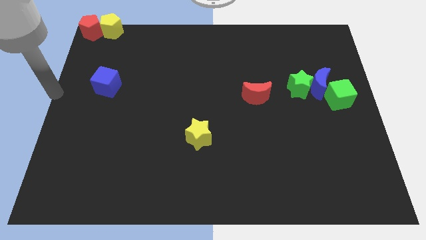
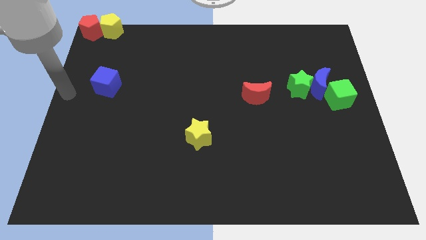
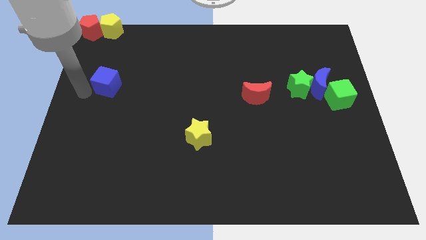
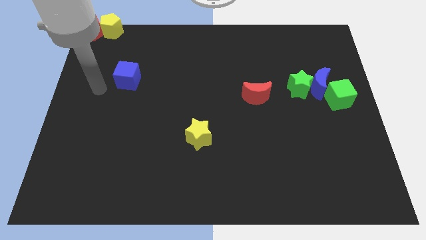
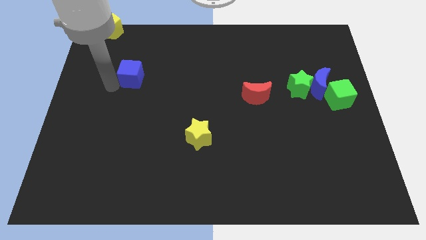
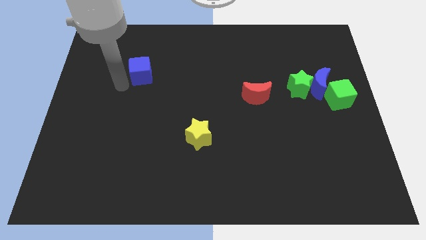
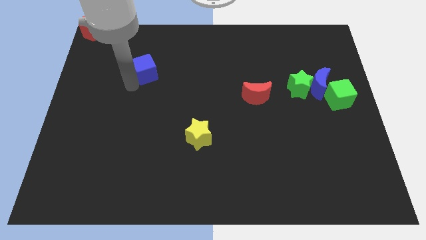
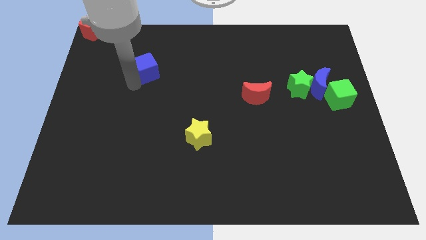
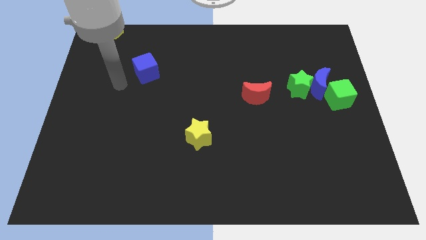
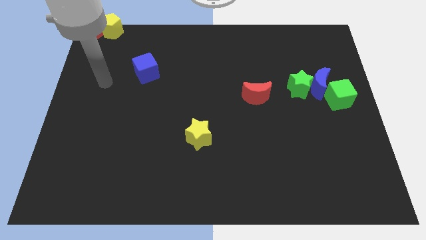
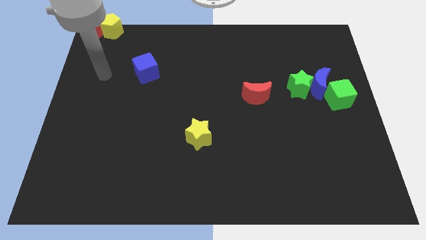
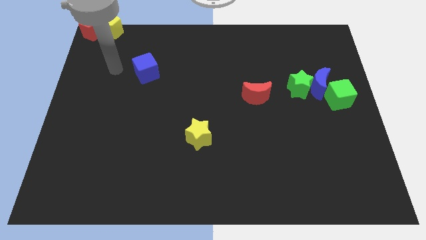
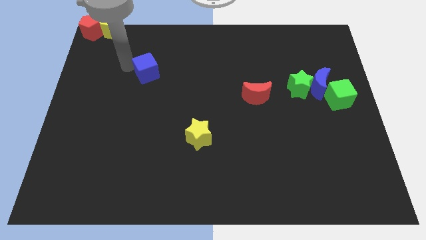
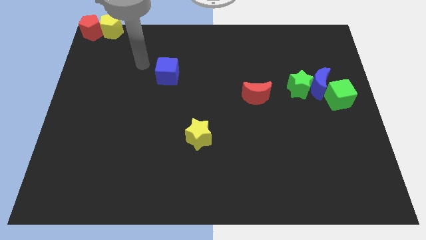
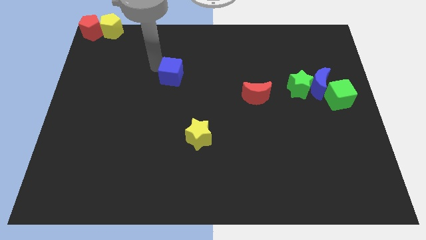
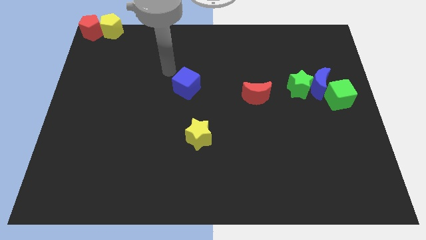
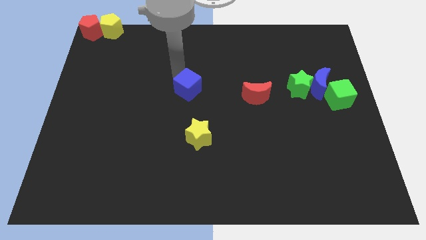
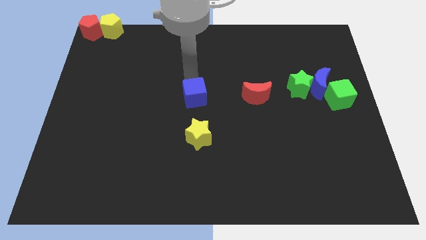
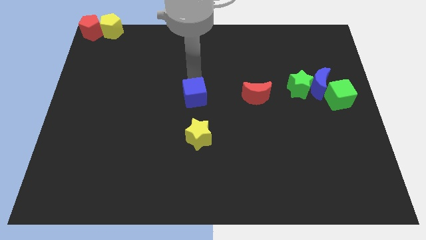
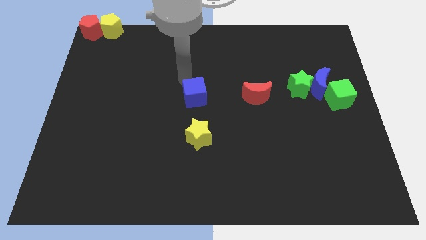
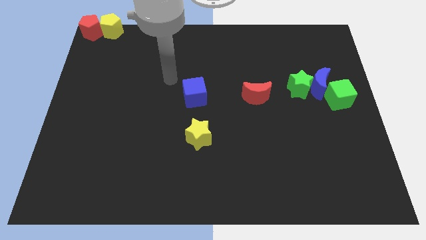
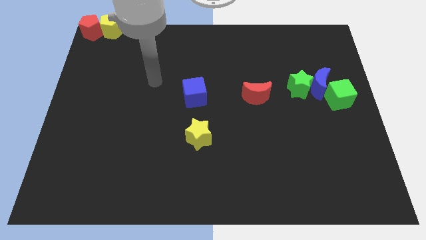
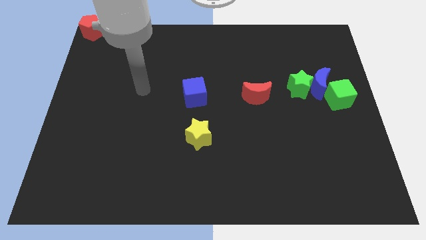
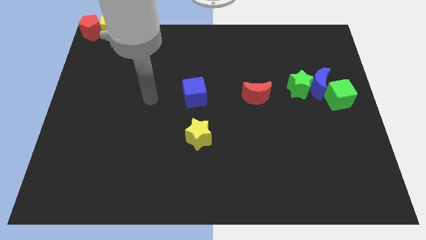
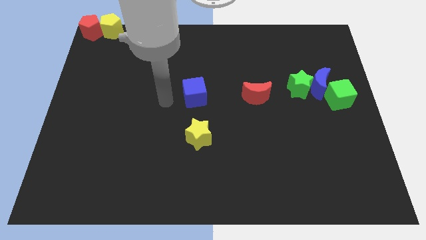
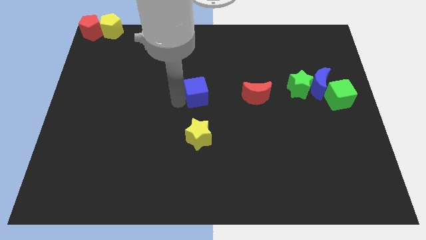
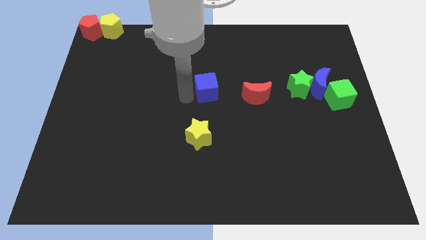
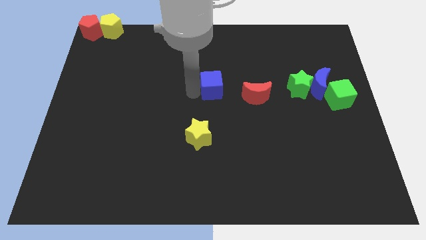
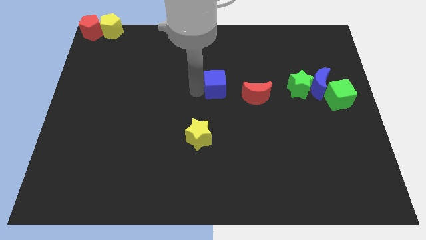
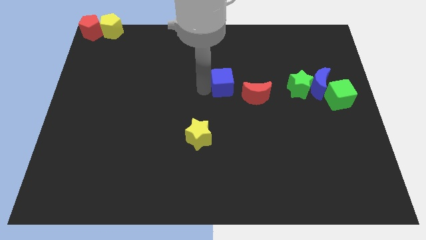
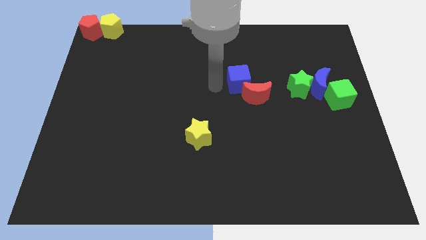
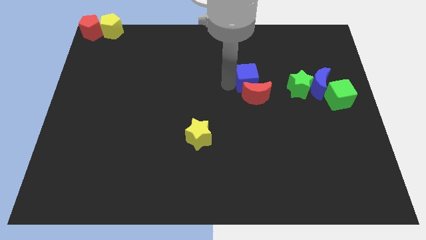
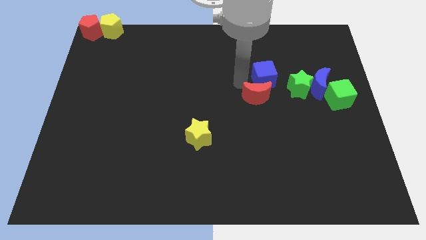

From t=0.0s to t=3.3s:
place the blue cube to the top side of the red moon

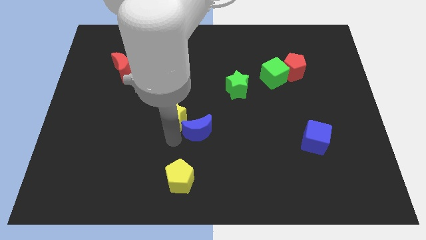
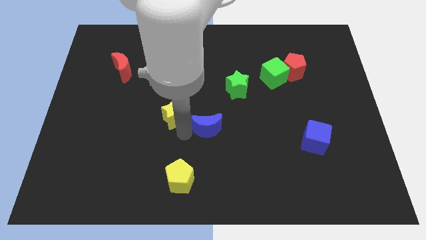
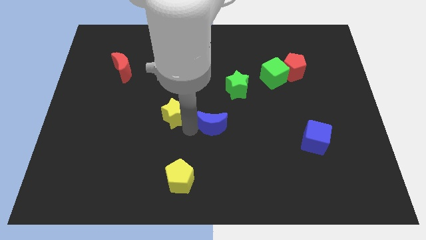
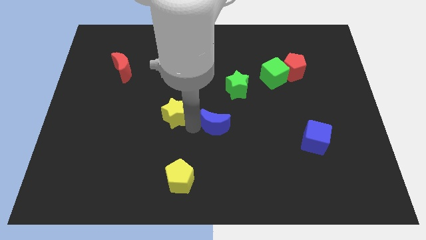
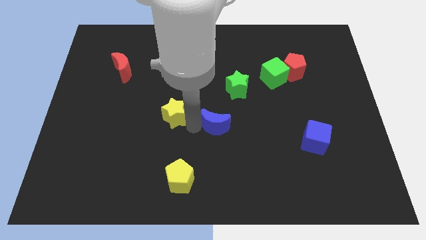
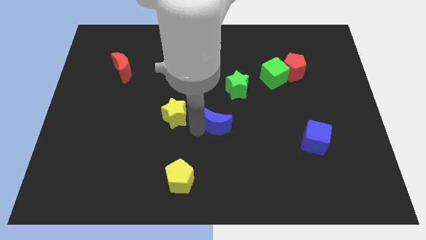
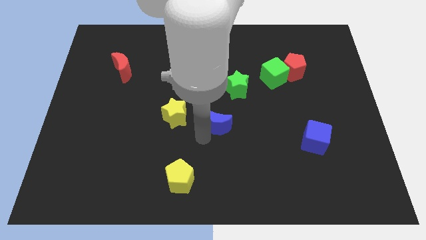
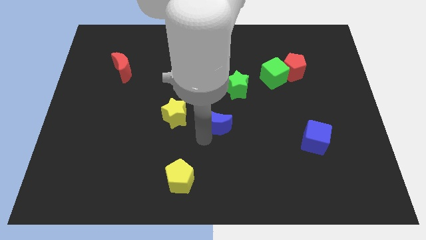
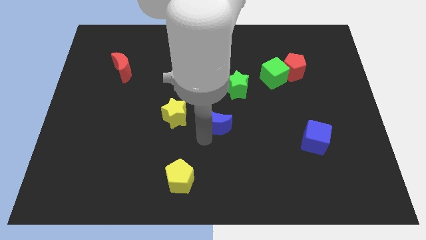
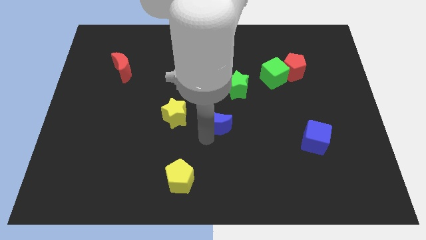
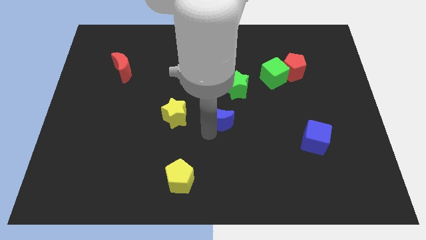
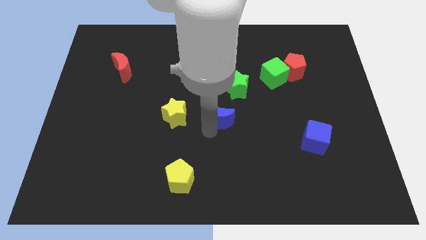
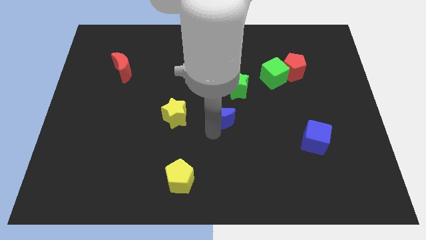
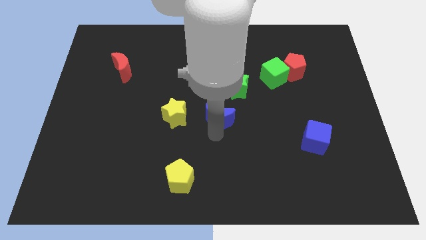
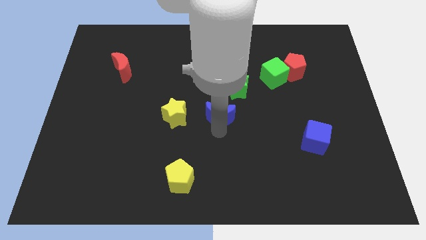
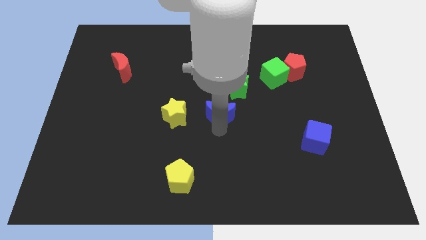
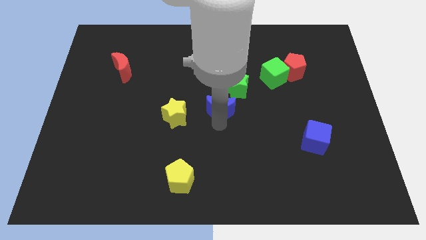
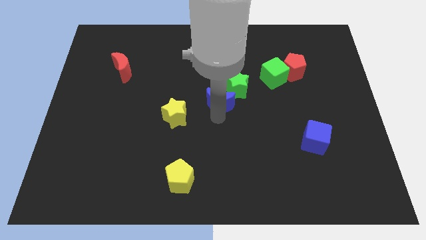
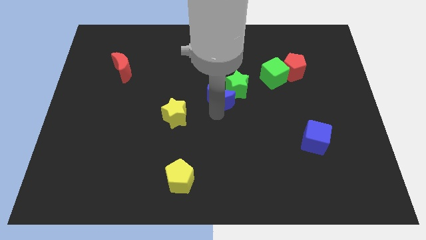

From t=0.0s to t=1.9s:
place the blue moon below to the green star

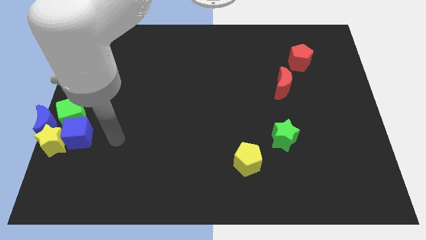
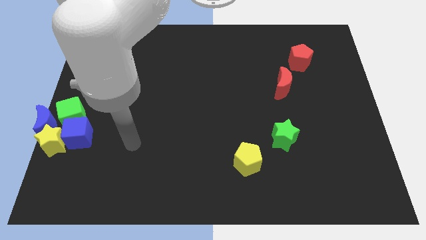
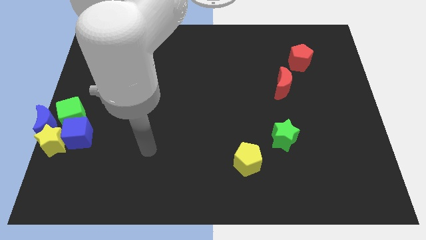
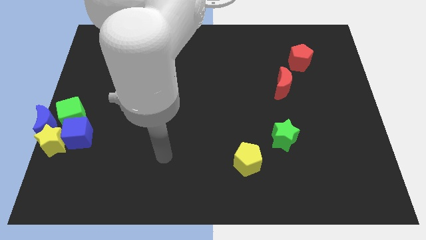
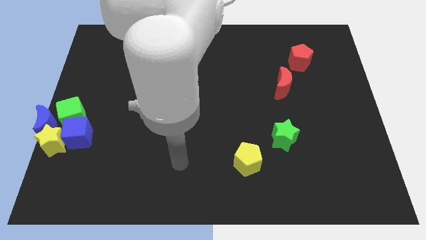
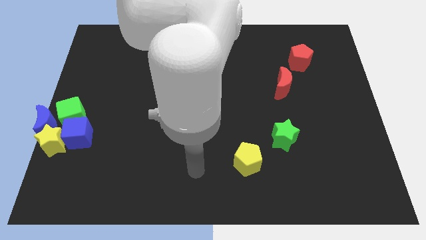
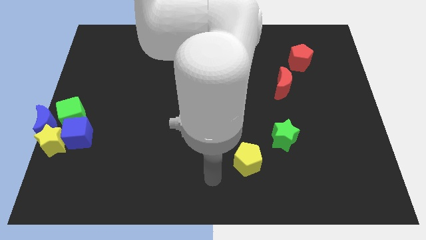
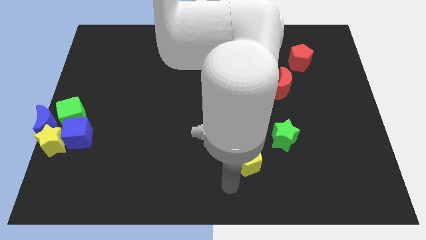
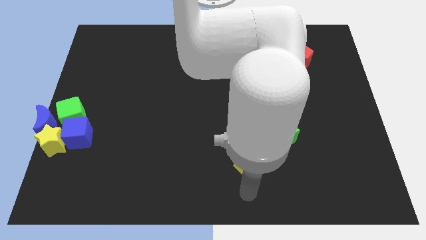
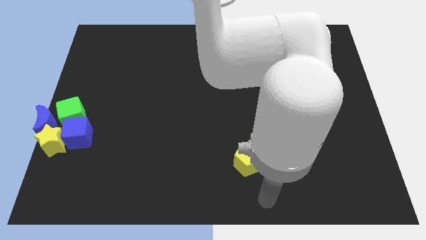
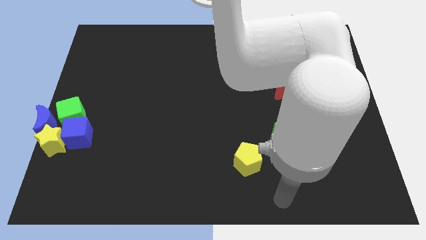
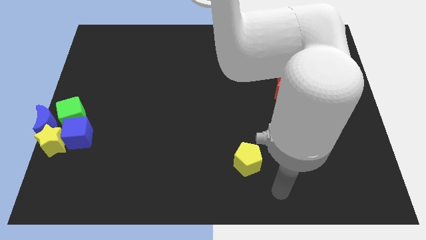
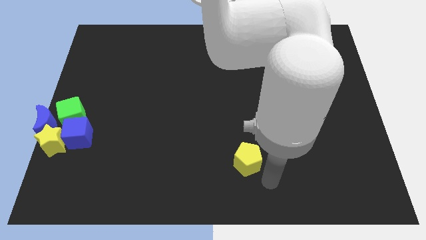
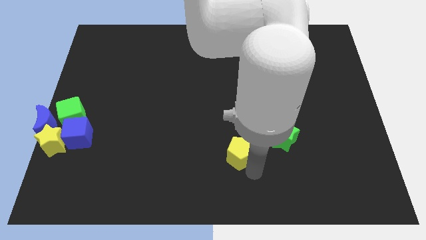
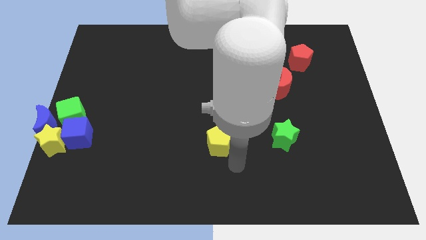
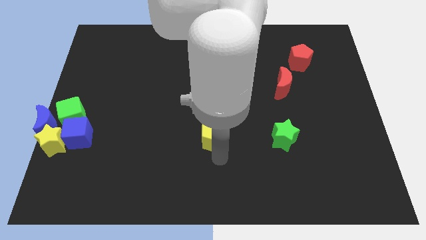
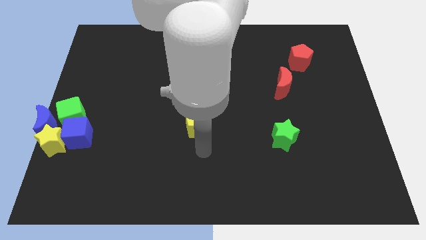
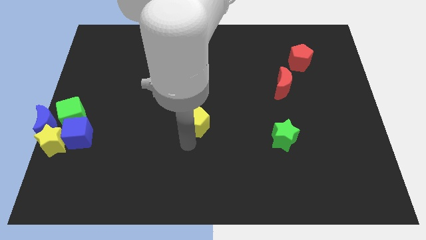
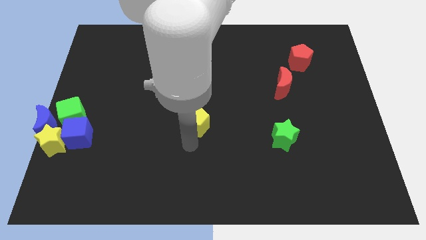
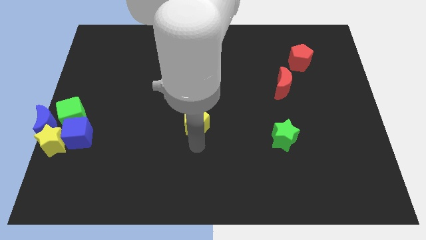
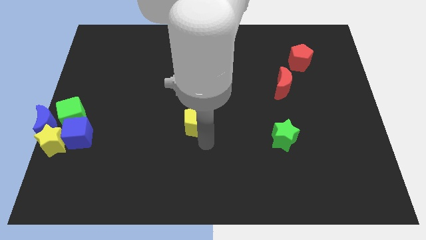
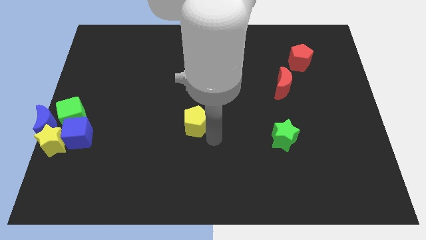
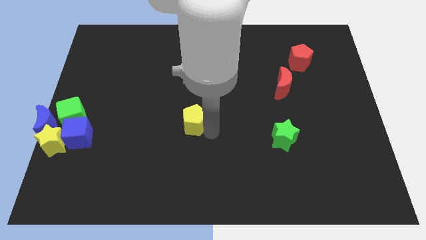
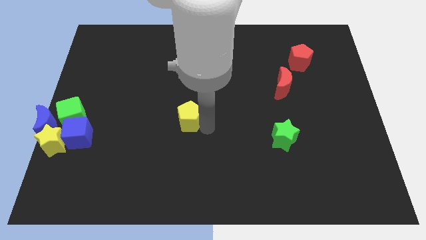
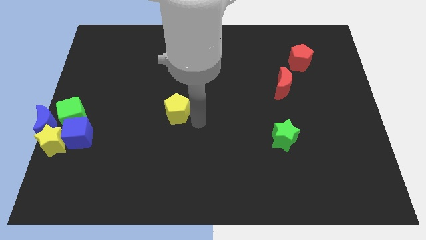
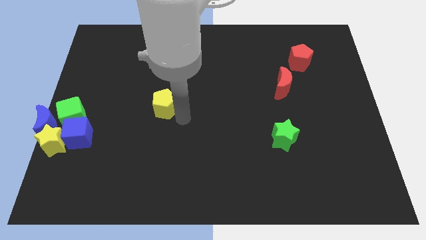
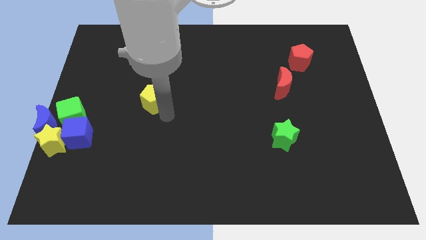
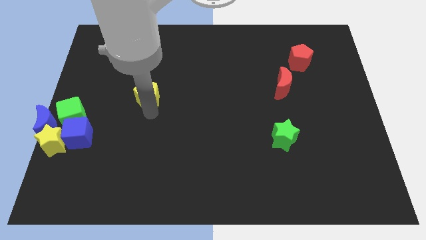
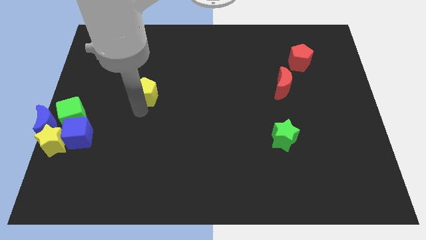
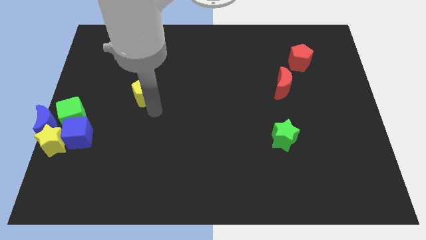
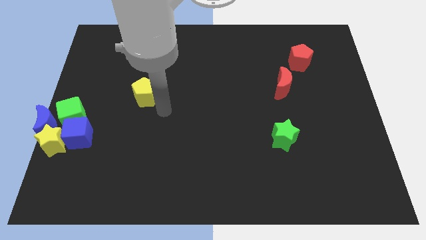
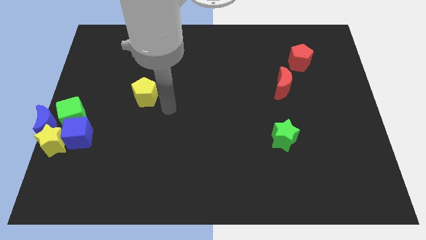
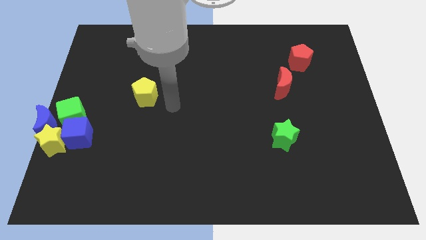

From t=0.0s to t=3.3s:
place the yellow pentagon right to the green cube

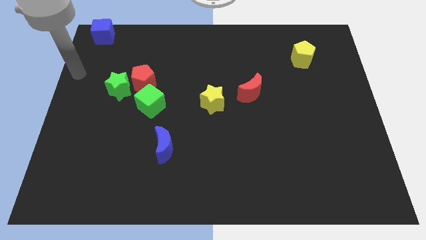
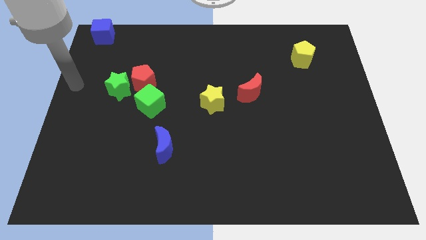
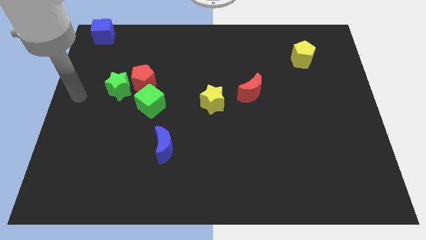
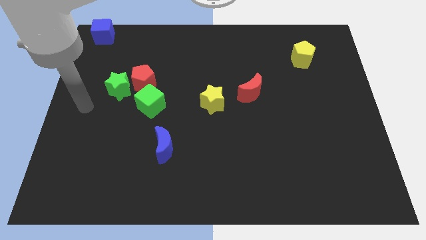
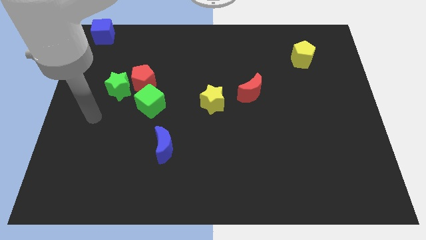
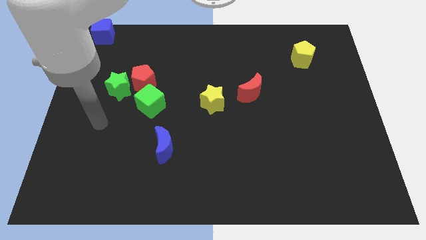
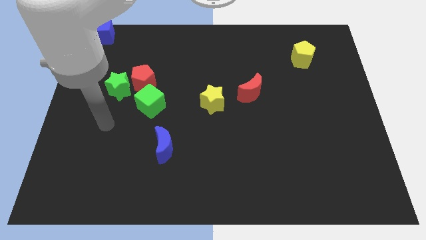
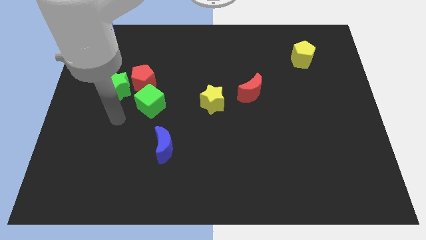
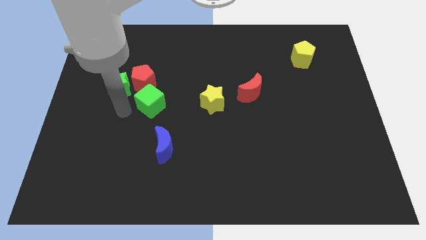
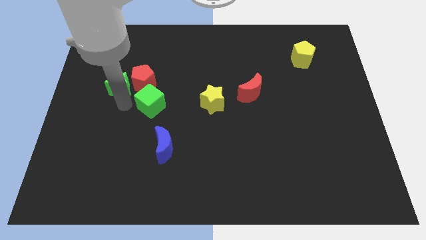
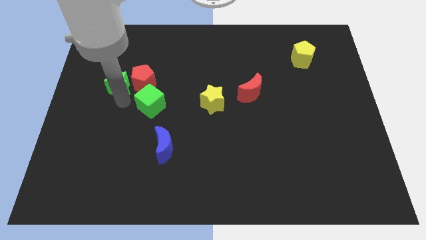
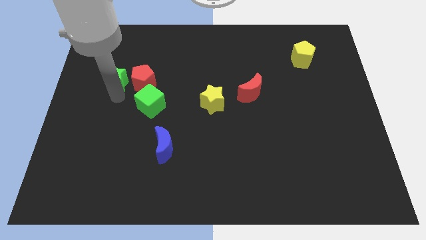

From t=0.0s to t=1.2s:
touch the bottom of green star
